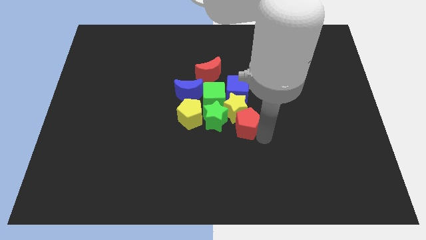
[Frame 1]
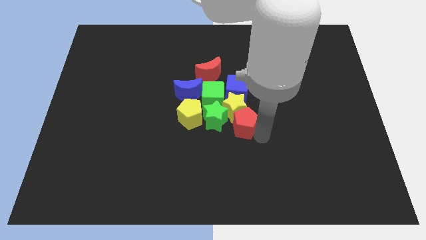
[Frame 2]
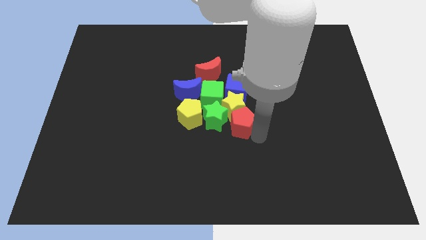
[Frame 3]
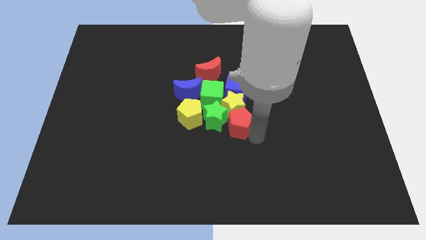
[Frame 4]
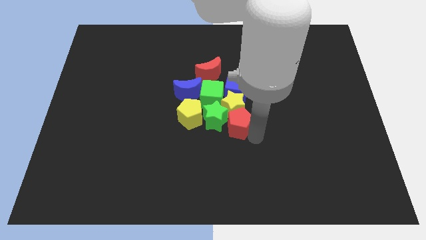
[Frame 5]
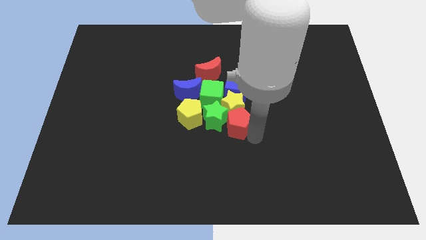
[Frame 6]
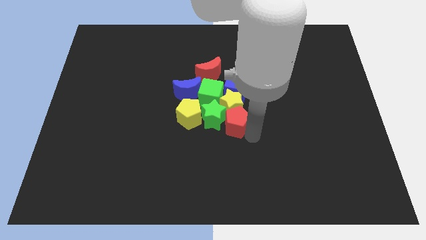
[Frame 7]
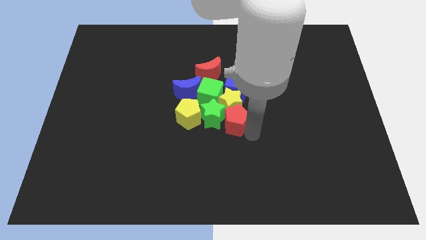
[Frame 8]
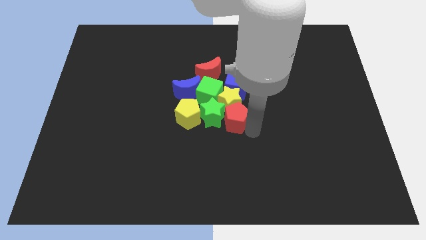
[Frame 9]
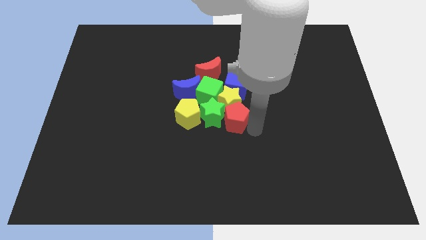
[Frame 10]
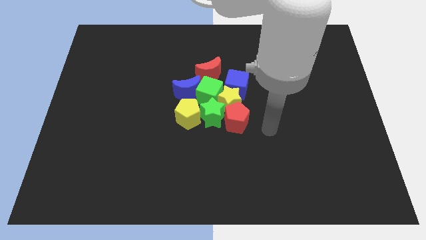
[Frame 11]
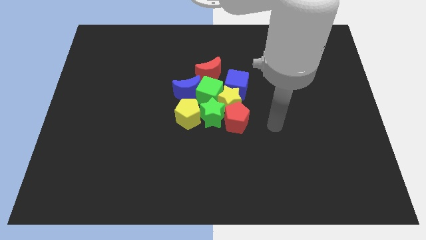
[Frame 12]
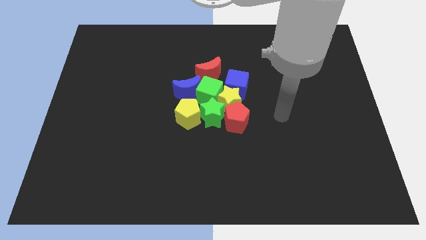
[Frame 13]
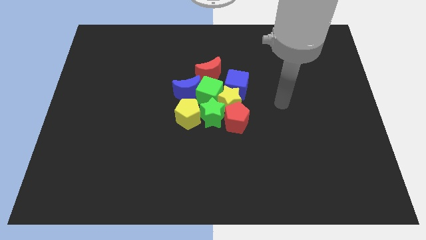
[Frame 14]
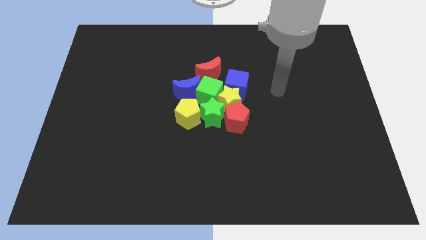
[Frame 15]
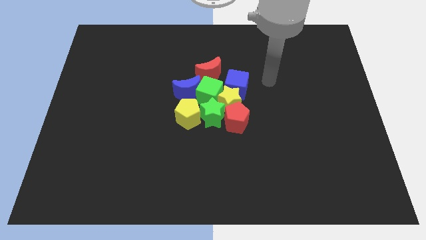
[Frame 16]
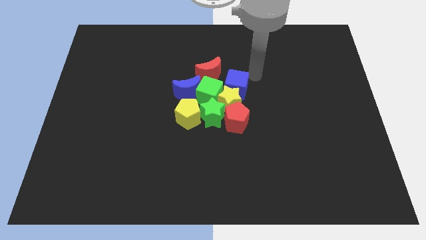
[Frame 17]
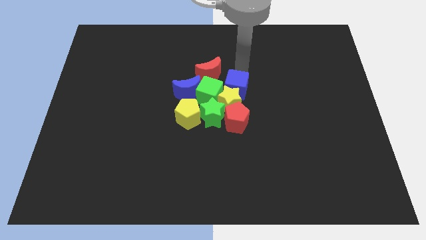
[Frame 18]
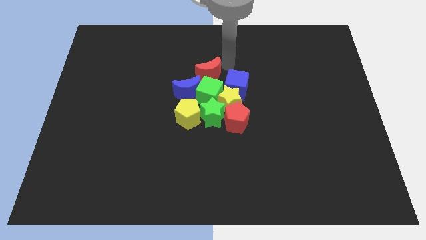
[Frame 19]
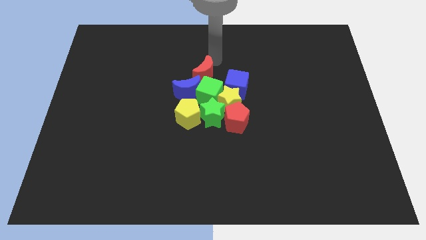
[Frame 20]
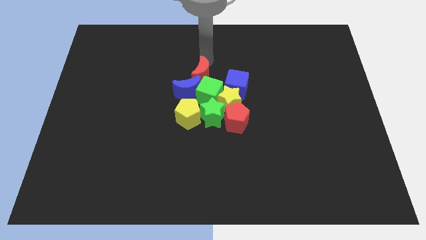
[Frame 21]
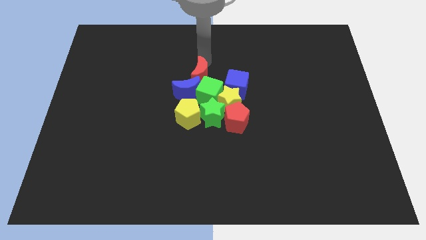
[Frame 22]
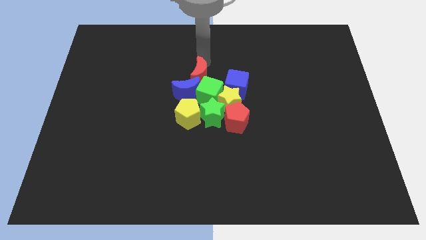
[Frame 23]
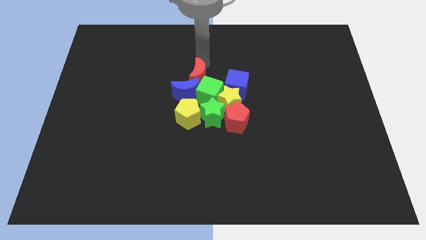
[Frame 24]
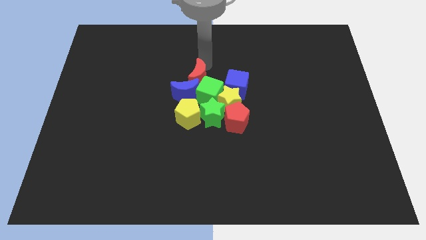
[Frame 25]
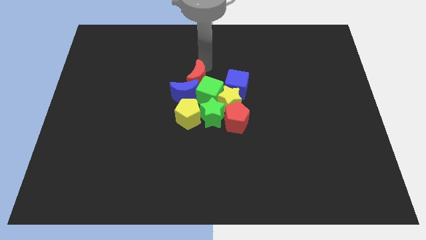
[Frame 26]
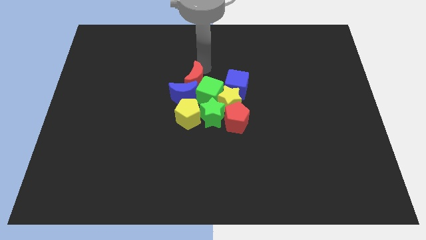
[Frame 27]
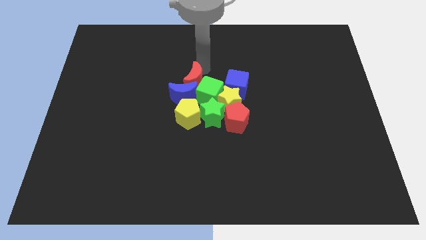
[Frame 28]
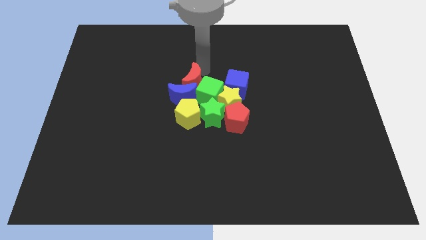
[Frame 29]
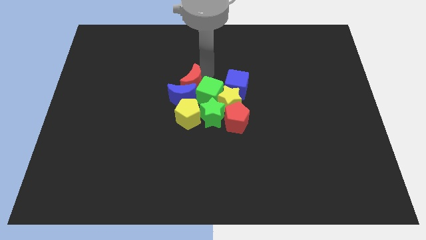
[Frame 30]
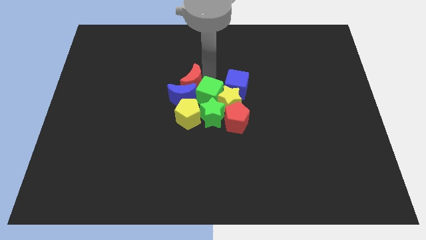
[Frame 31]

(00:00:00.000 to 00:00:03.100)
move the red crescent into the blue crescent

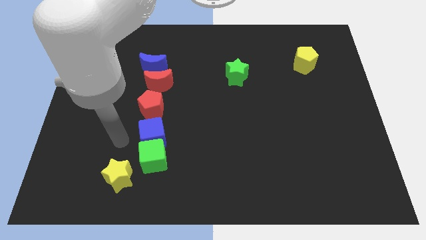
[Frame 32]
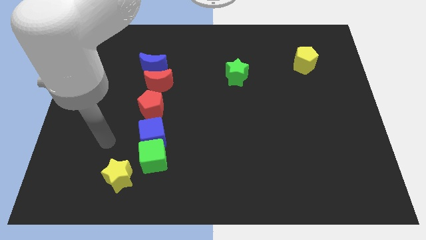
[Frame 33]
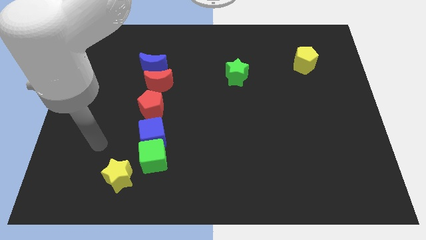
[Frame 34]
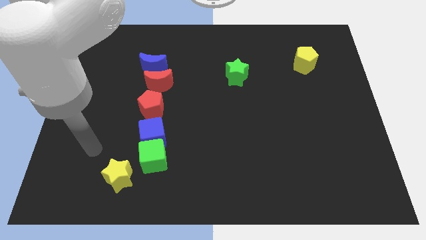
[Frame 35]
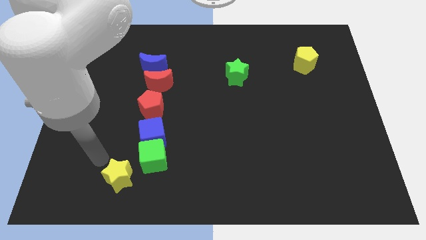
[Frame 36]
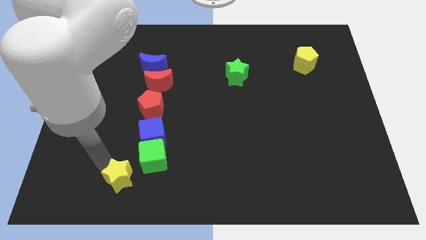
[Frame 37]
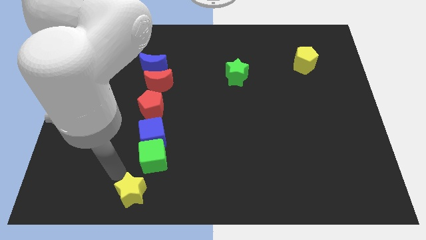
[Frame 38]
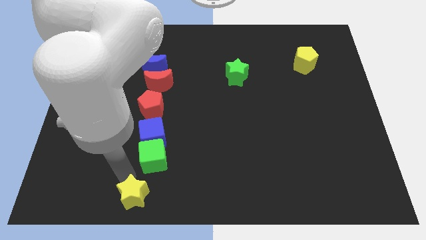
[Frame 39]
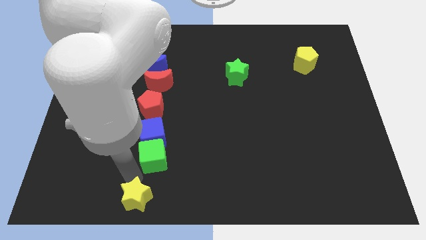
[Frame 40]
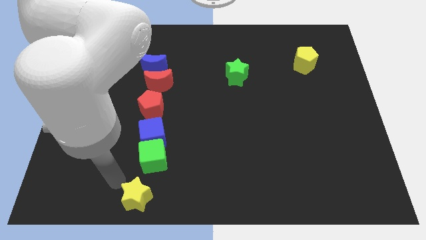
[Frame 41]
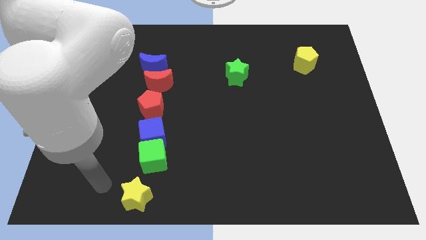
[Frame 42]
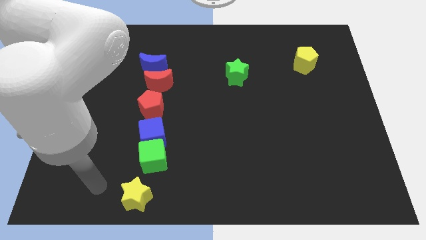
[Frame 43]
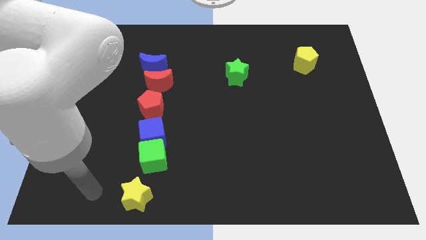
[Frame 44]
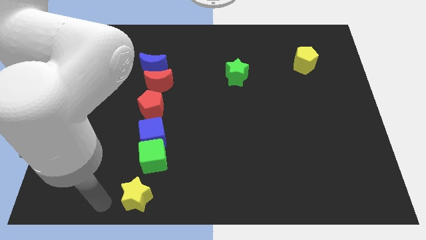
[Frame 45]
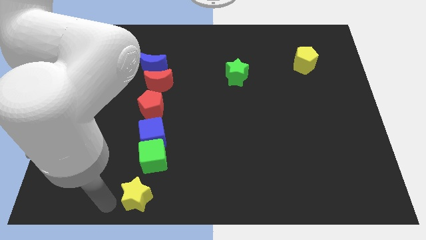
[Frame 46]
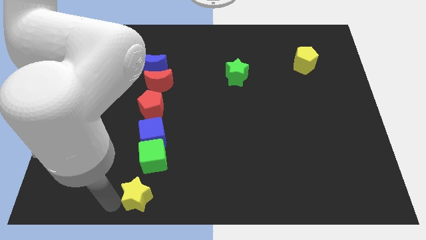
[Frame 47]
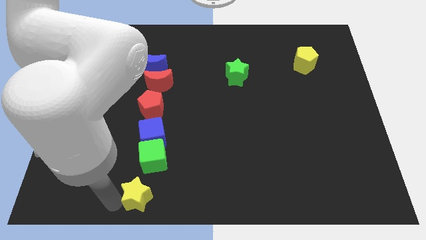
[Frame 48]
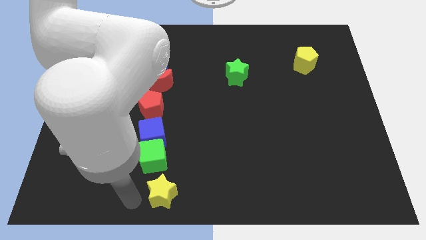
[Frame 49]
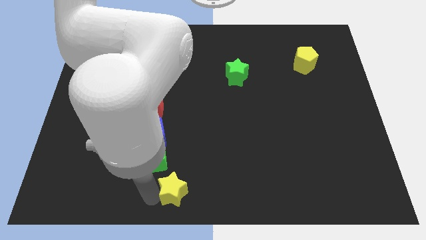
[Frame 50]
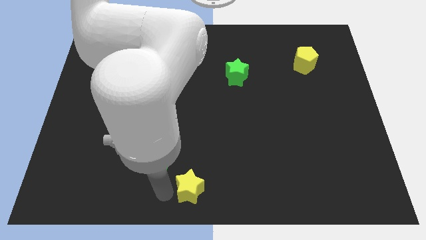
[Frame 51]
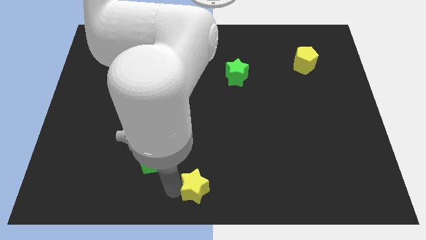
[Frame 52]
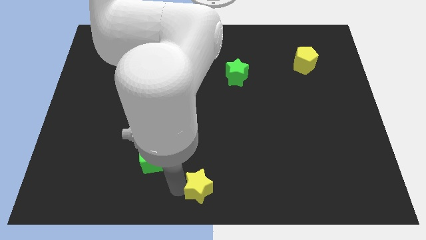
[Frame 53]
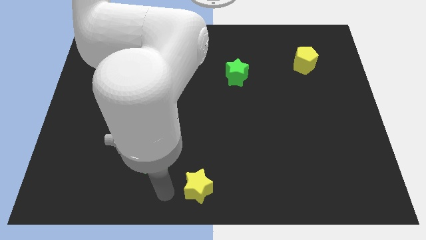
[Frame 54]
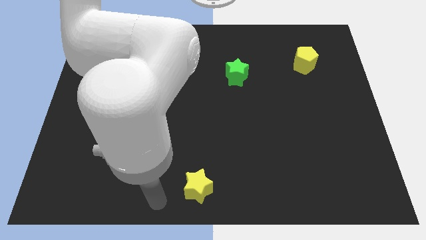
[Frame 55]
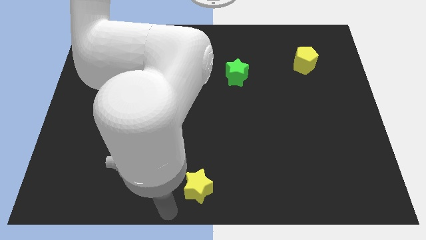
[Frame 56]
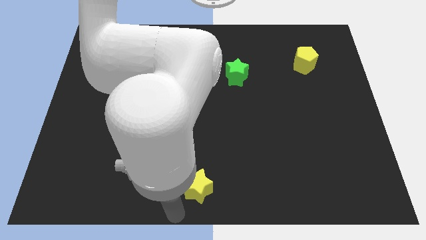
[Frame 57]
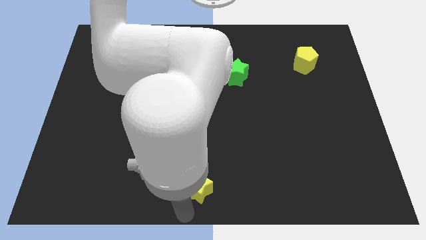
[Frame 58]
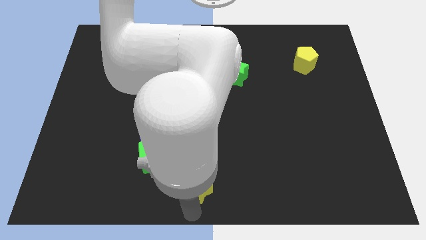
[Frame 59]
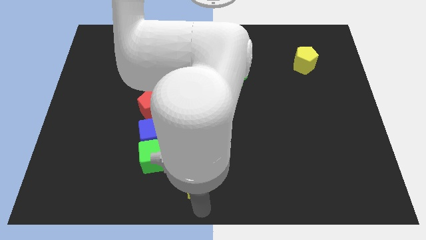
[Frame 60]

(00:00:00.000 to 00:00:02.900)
move the yellow star diagonally bottom right of the green cube

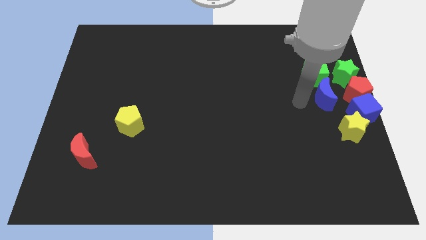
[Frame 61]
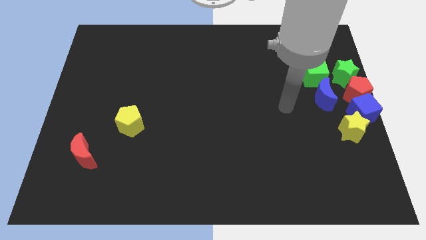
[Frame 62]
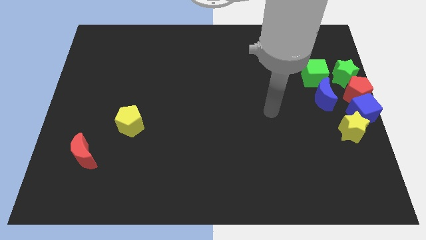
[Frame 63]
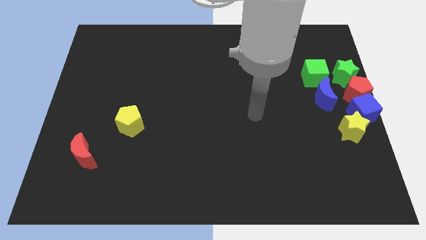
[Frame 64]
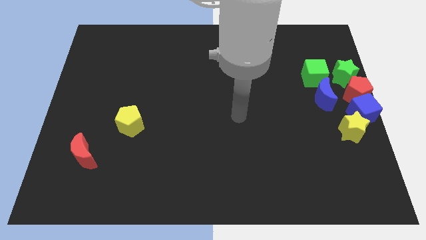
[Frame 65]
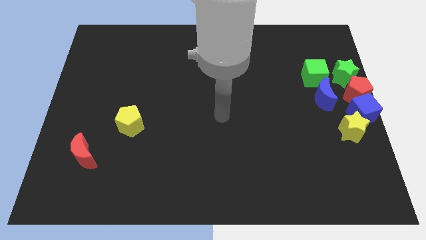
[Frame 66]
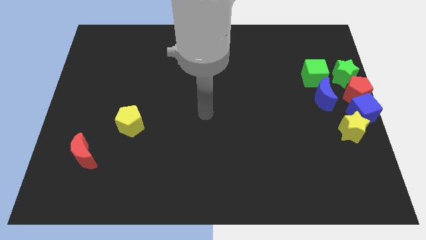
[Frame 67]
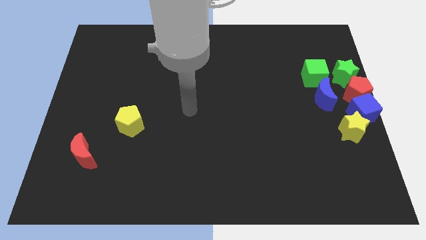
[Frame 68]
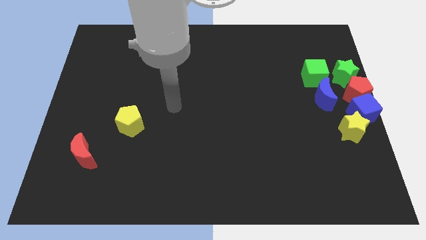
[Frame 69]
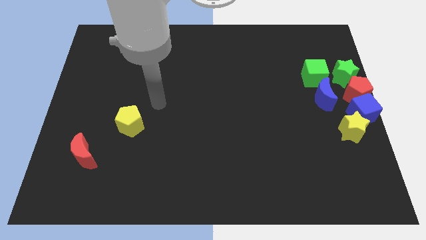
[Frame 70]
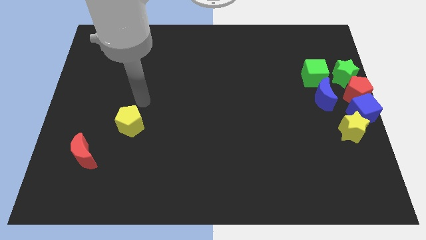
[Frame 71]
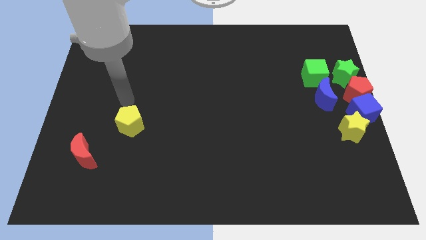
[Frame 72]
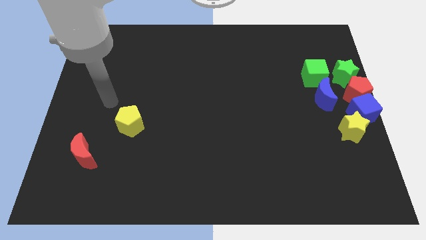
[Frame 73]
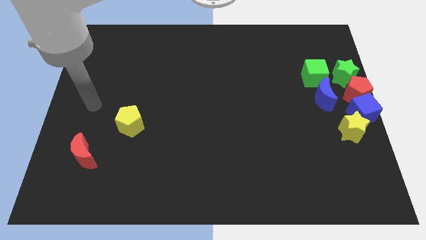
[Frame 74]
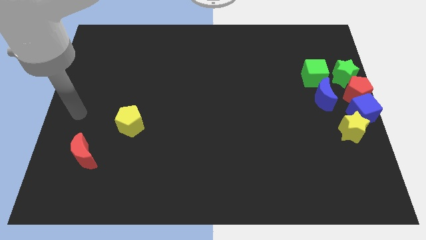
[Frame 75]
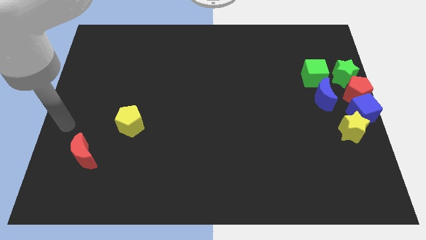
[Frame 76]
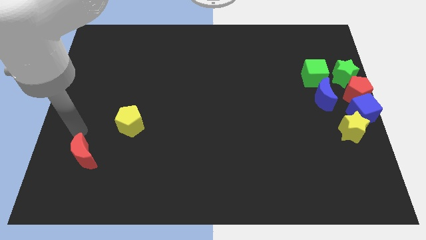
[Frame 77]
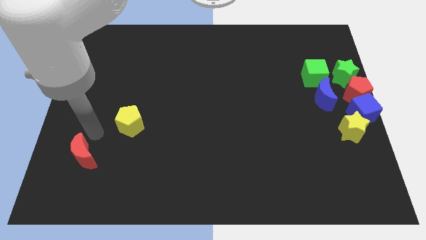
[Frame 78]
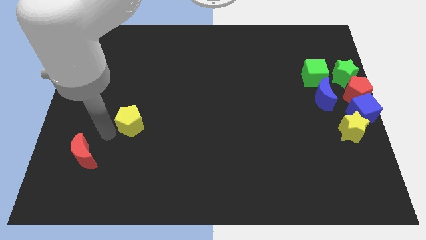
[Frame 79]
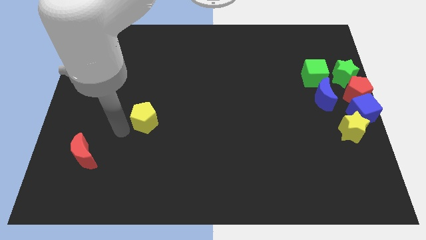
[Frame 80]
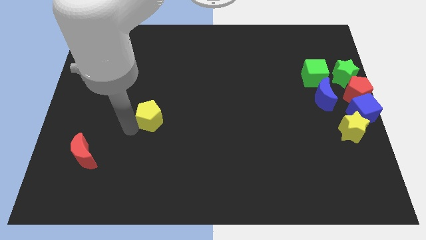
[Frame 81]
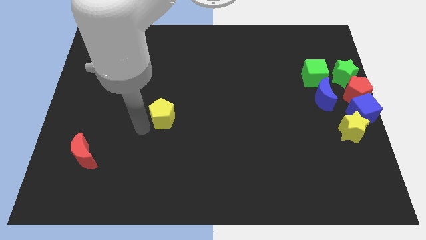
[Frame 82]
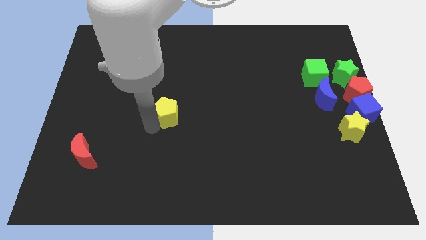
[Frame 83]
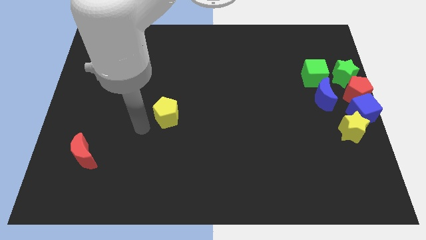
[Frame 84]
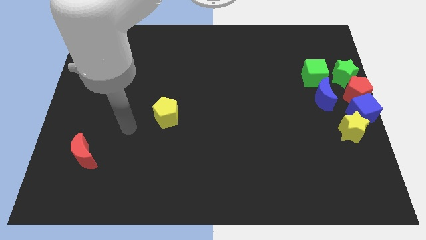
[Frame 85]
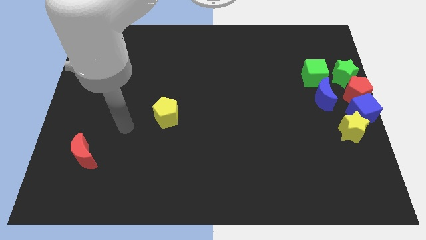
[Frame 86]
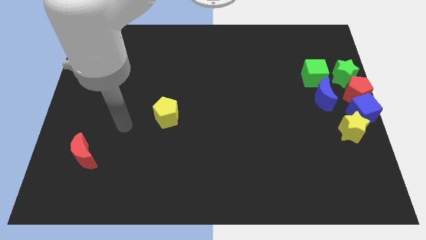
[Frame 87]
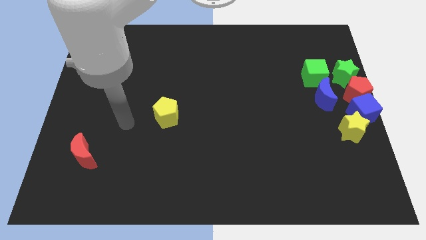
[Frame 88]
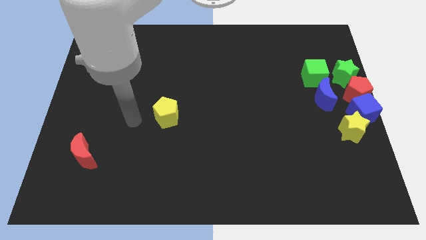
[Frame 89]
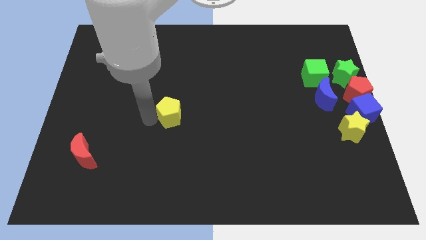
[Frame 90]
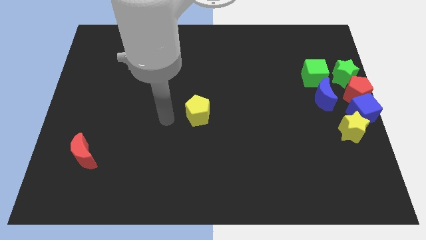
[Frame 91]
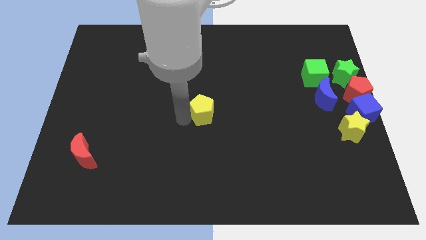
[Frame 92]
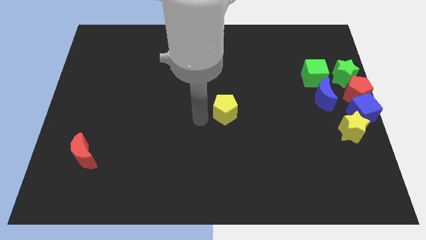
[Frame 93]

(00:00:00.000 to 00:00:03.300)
push the yellow pentagon to the center of the board
